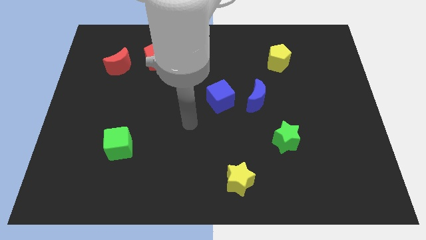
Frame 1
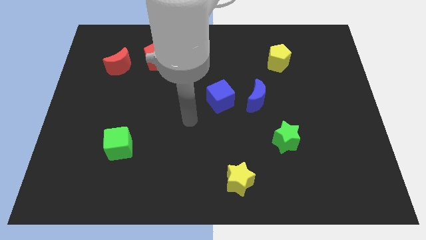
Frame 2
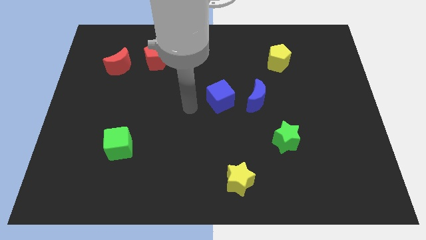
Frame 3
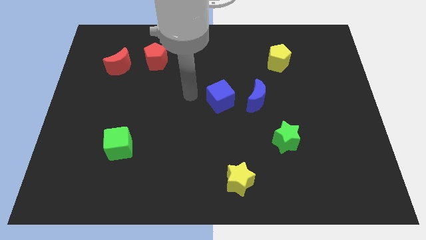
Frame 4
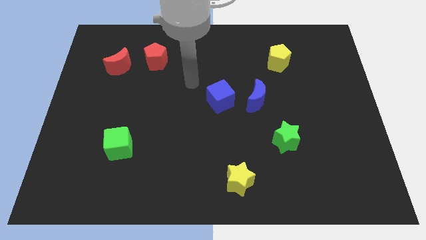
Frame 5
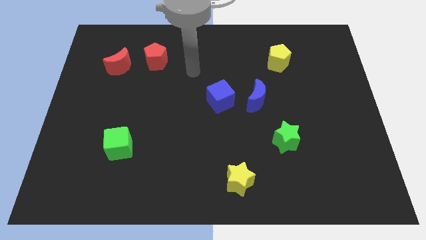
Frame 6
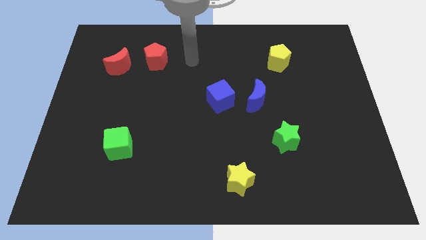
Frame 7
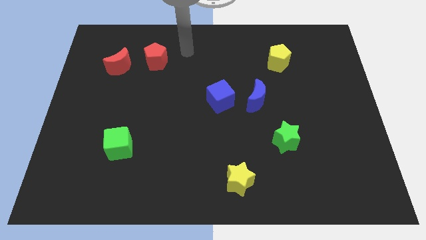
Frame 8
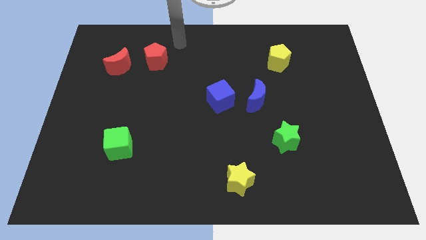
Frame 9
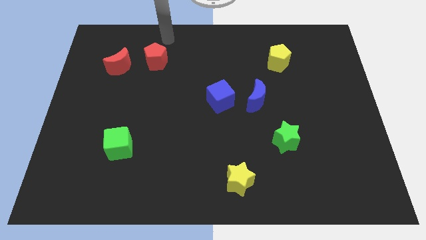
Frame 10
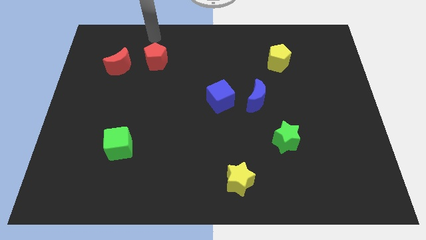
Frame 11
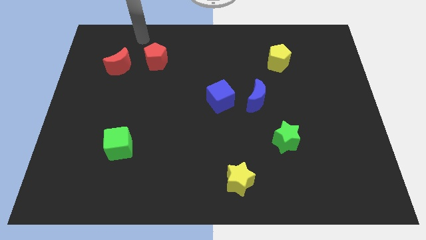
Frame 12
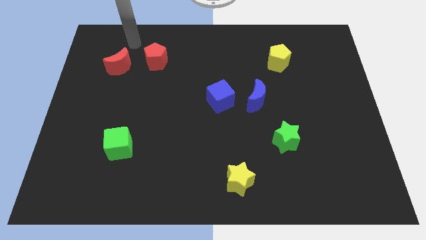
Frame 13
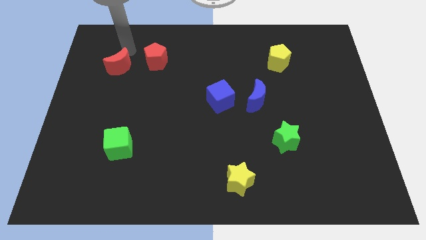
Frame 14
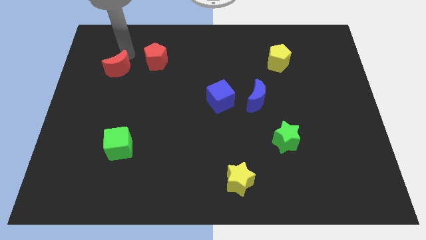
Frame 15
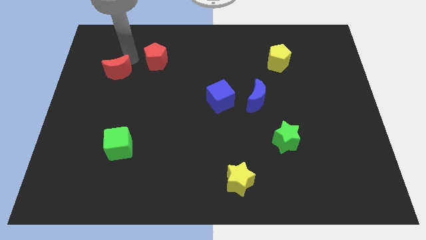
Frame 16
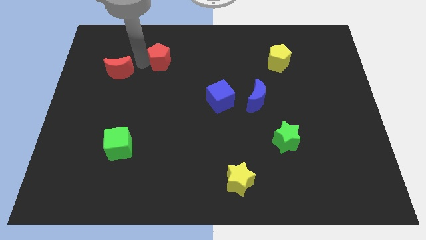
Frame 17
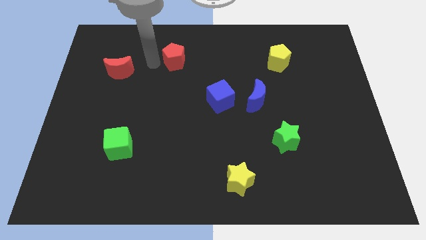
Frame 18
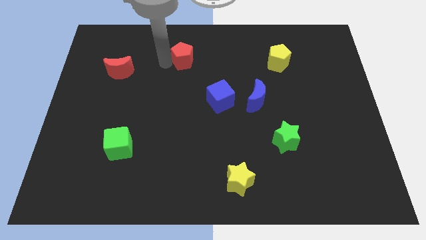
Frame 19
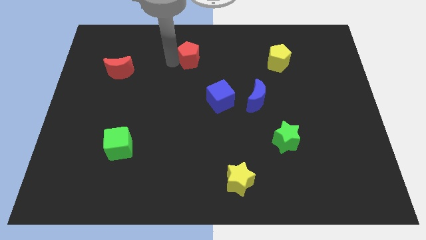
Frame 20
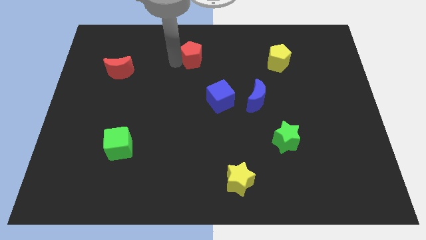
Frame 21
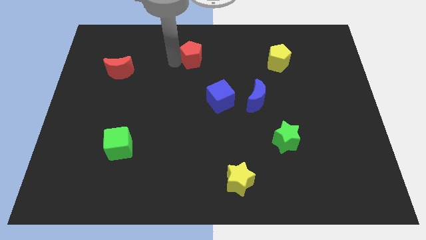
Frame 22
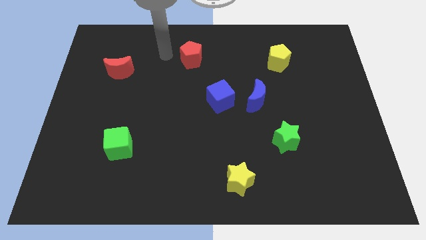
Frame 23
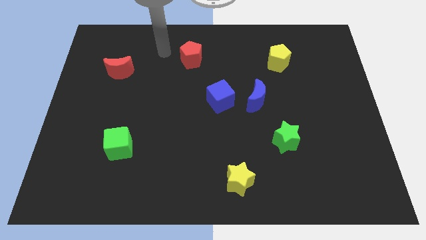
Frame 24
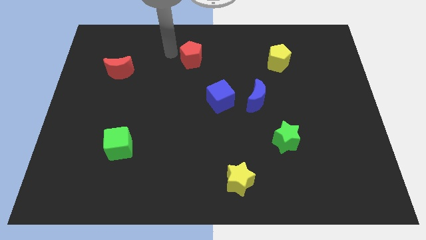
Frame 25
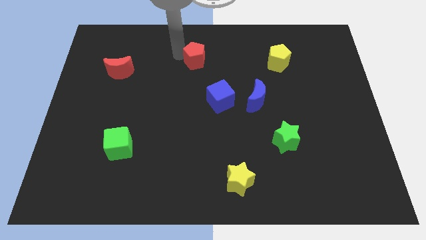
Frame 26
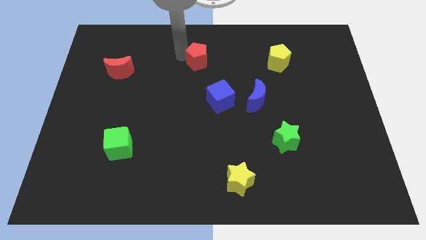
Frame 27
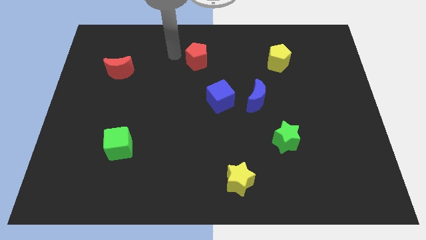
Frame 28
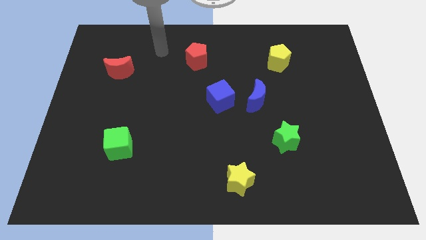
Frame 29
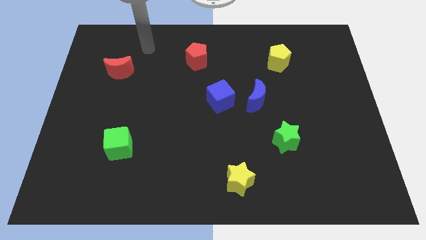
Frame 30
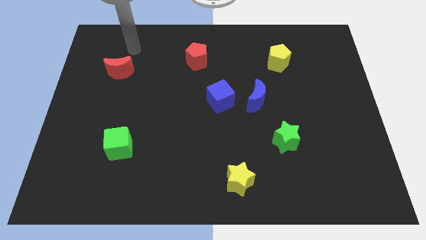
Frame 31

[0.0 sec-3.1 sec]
place the red pentagon diagonally to the top left side of the blue cube

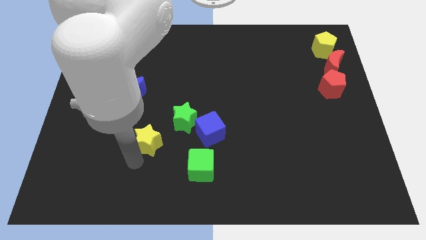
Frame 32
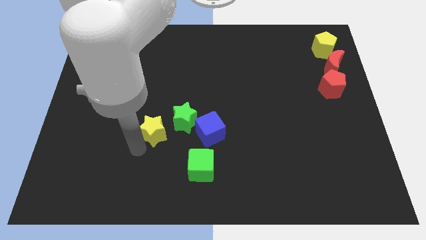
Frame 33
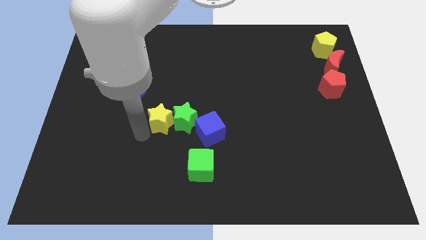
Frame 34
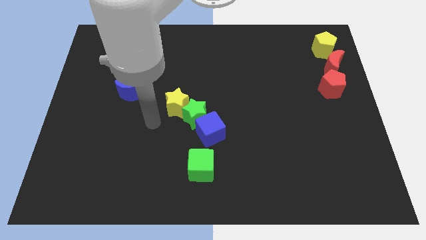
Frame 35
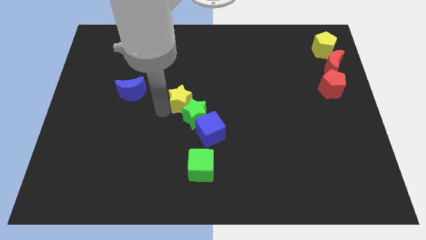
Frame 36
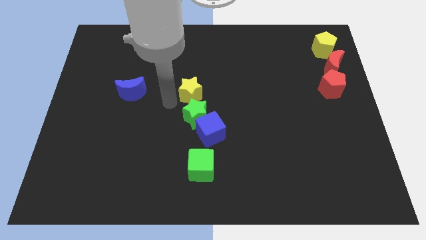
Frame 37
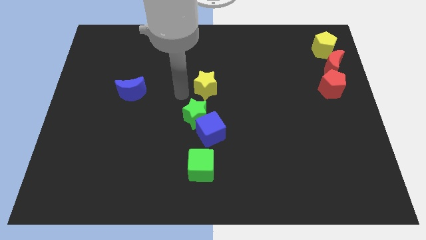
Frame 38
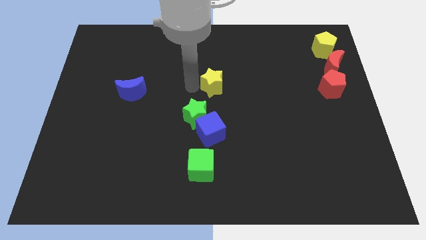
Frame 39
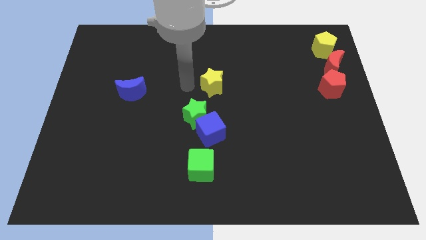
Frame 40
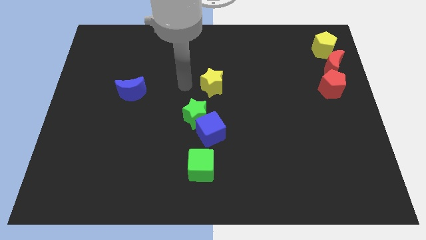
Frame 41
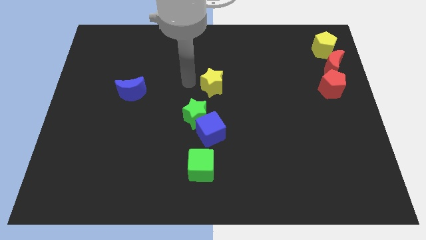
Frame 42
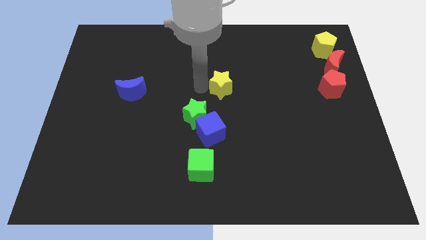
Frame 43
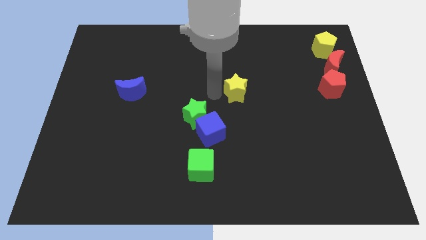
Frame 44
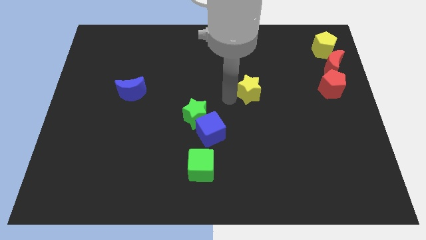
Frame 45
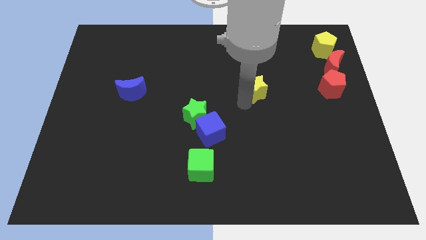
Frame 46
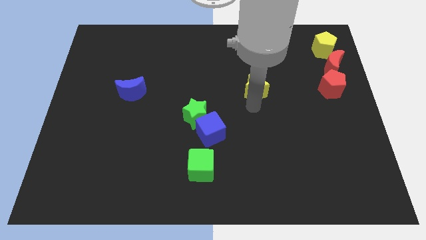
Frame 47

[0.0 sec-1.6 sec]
move yellow star diagonally top right to the green star

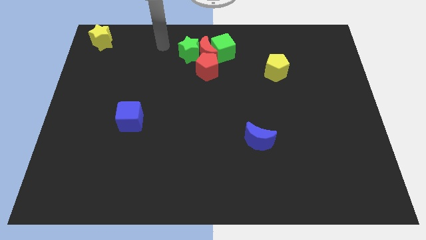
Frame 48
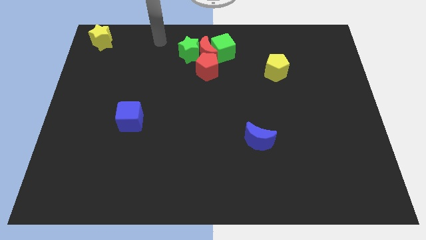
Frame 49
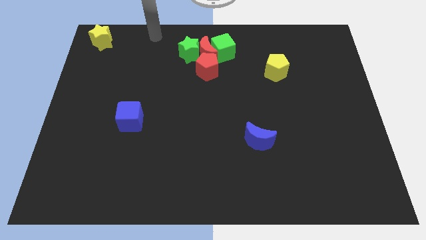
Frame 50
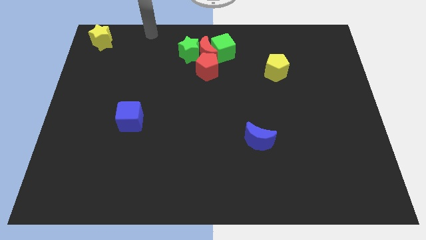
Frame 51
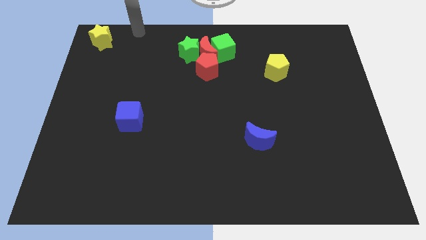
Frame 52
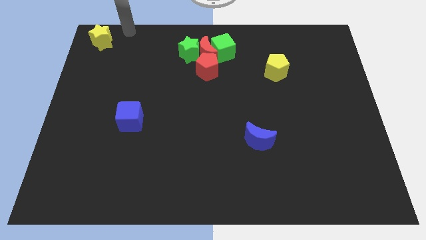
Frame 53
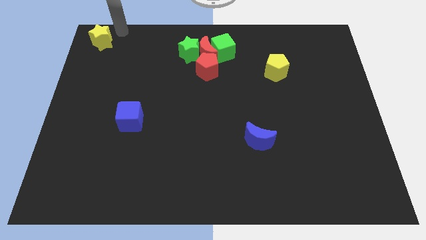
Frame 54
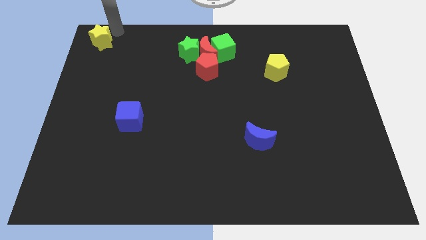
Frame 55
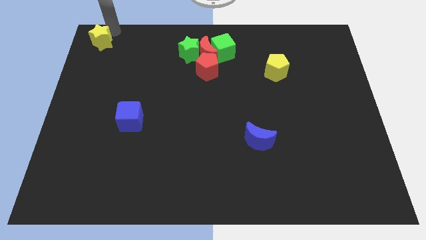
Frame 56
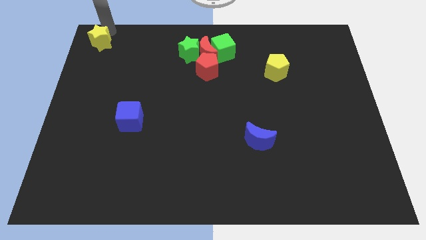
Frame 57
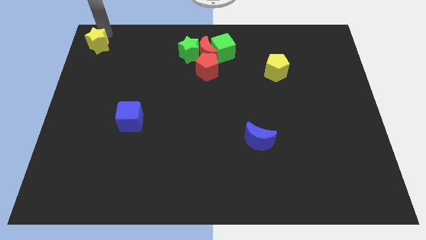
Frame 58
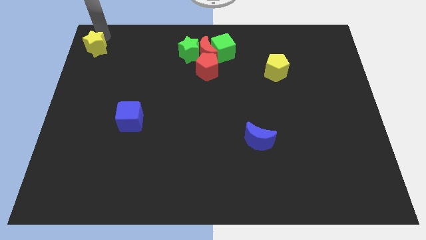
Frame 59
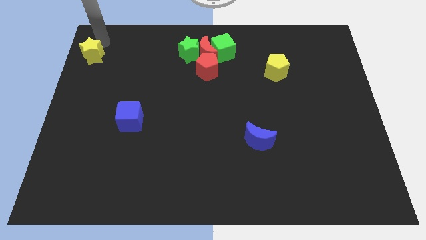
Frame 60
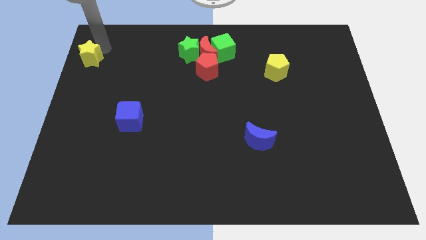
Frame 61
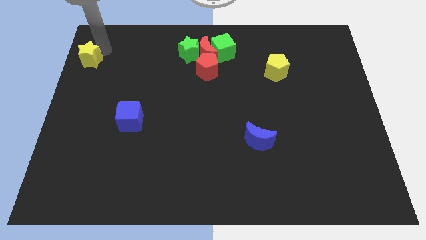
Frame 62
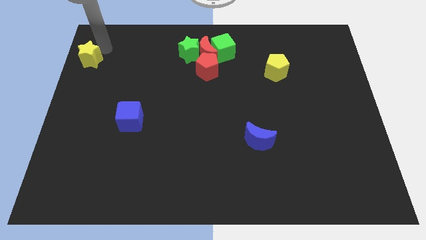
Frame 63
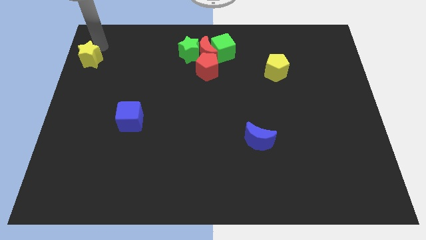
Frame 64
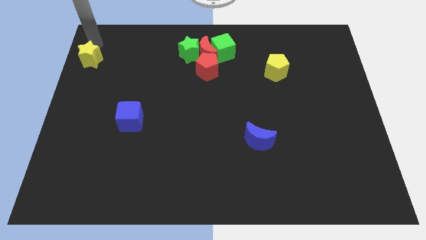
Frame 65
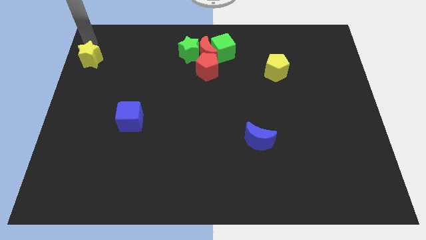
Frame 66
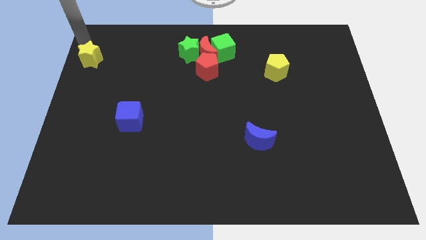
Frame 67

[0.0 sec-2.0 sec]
push the yellow star parallel to the green star

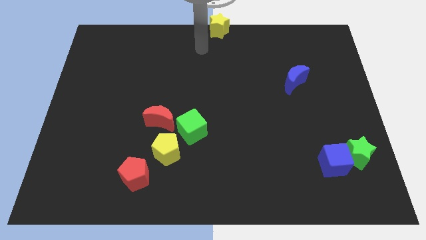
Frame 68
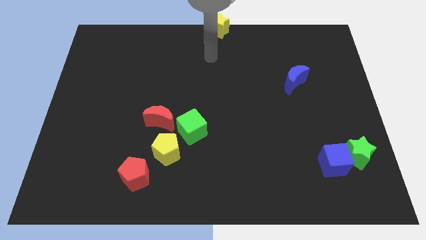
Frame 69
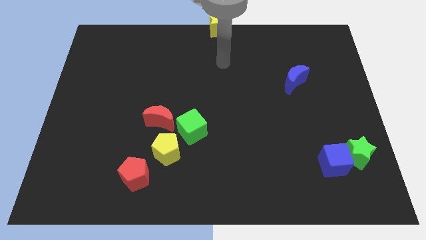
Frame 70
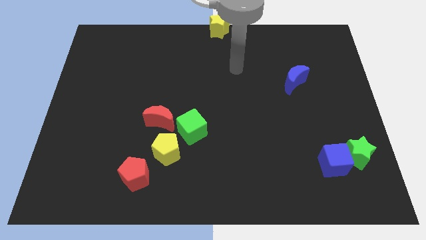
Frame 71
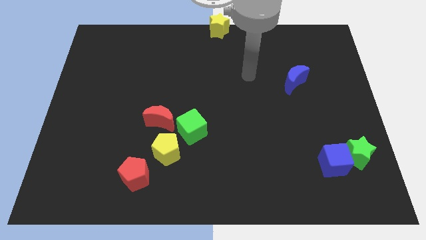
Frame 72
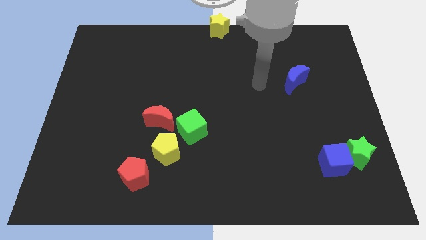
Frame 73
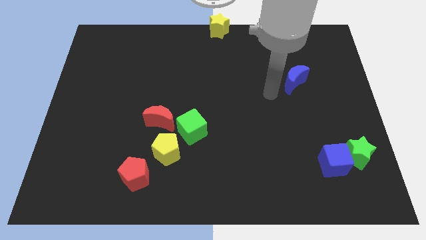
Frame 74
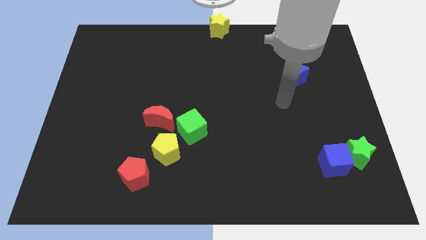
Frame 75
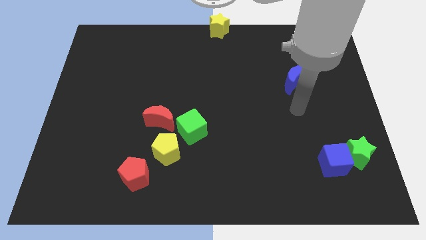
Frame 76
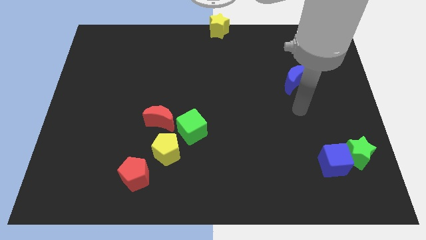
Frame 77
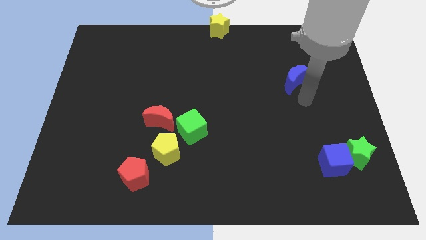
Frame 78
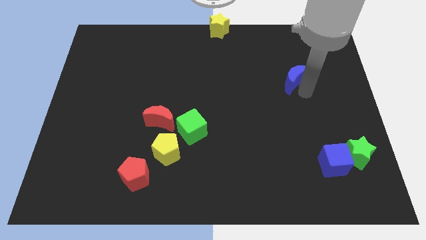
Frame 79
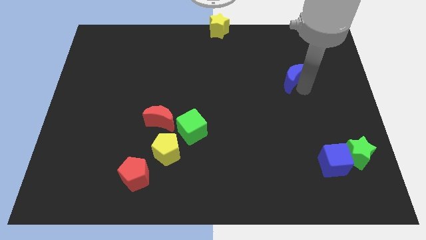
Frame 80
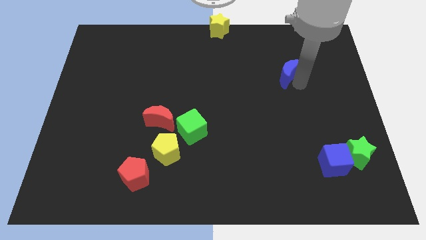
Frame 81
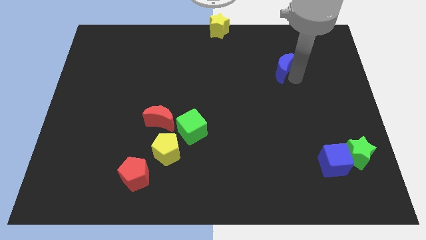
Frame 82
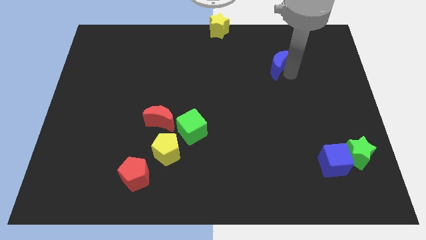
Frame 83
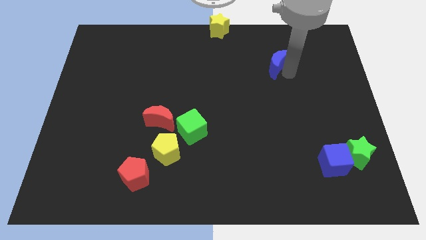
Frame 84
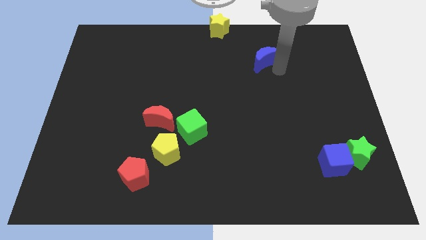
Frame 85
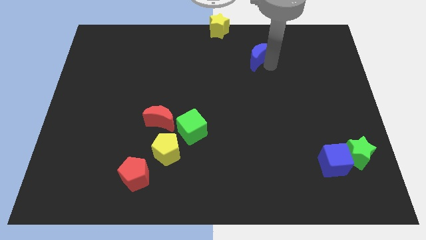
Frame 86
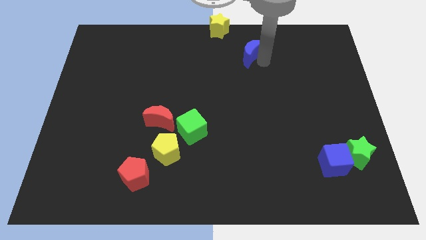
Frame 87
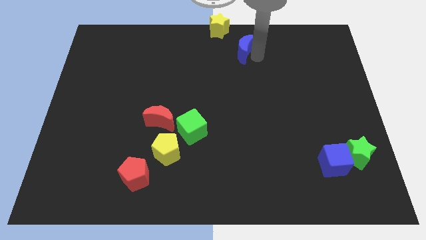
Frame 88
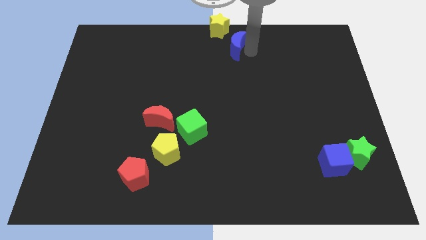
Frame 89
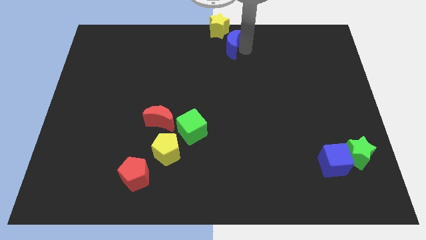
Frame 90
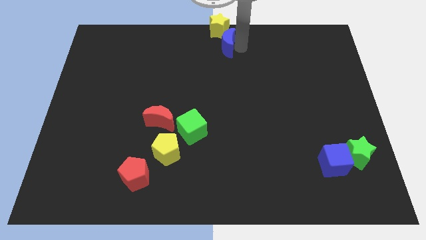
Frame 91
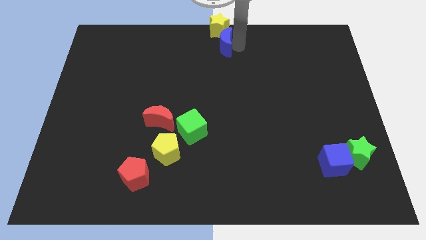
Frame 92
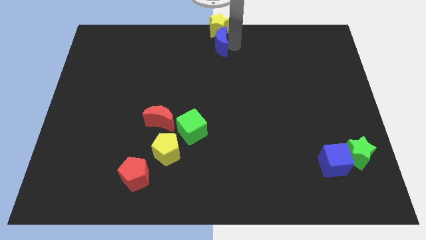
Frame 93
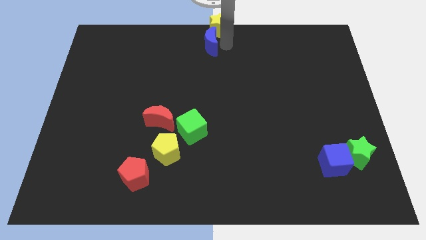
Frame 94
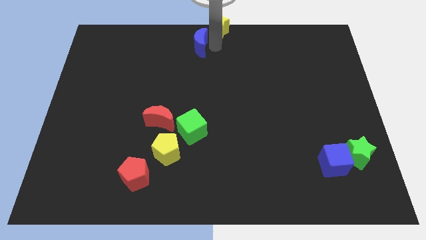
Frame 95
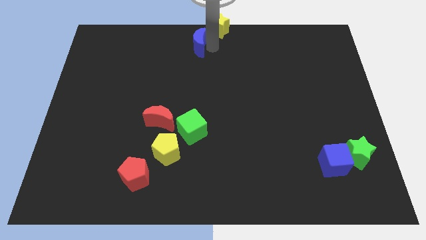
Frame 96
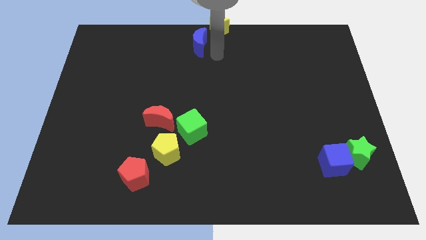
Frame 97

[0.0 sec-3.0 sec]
push the blue moon closer to the yellow star
